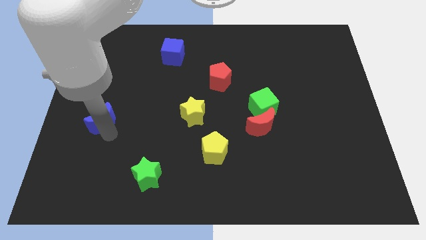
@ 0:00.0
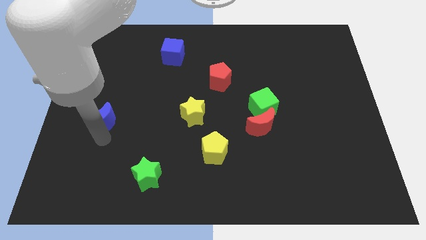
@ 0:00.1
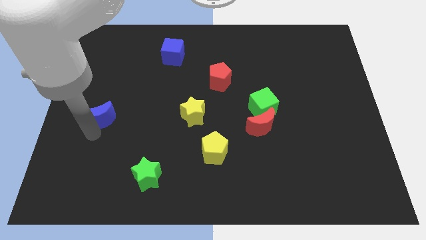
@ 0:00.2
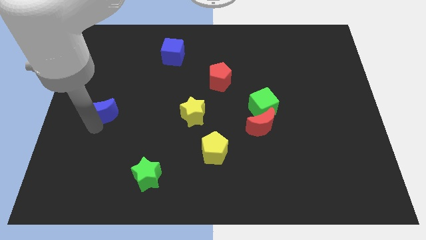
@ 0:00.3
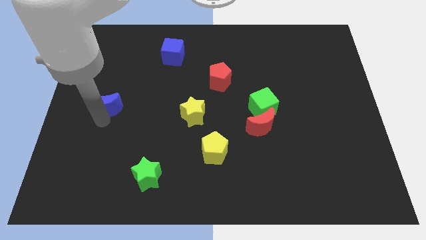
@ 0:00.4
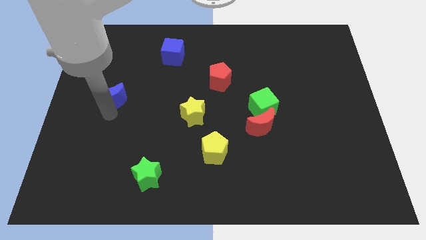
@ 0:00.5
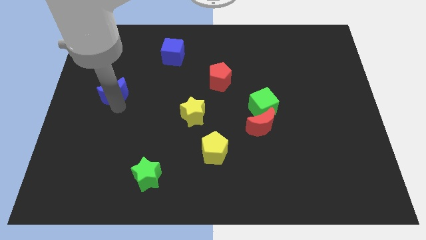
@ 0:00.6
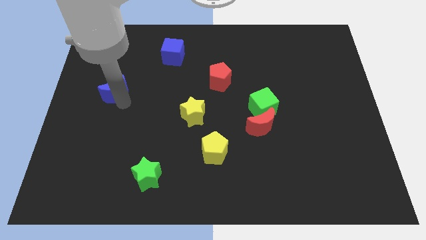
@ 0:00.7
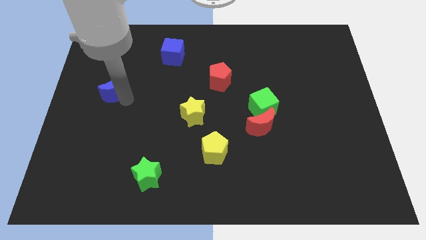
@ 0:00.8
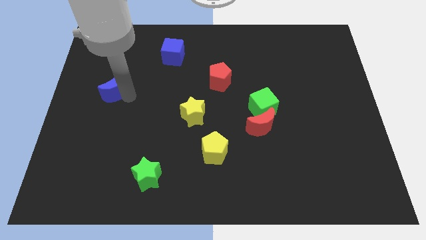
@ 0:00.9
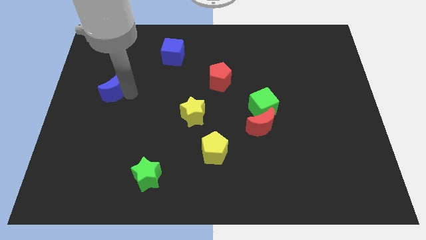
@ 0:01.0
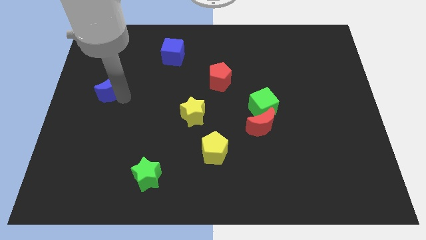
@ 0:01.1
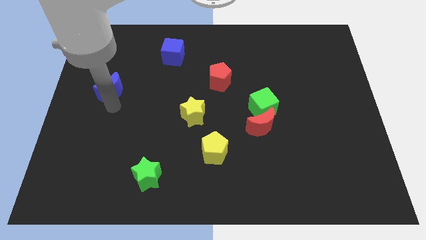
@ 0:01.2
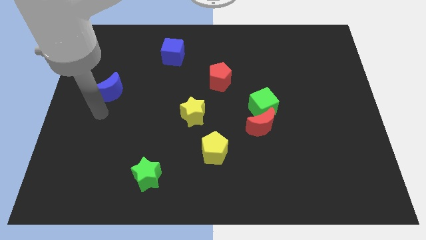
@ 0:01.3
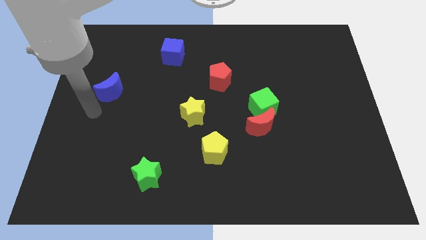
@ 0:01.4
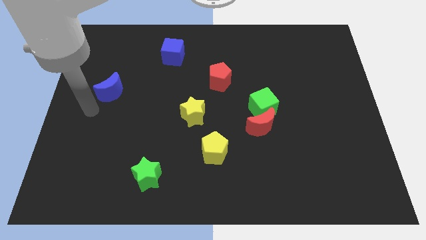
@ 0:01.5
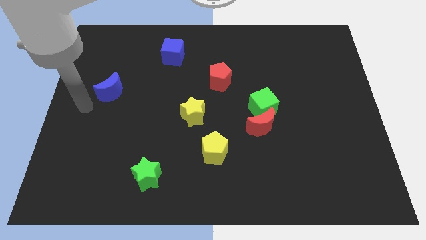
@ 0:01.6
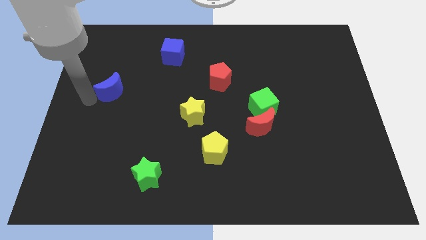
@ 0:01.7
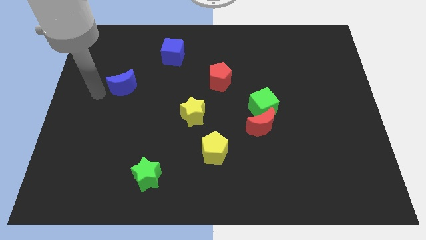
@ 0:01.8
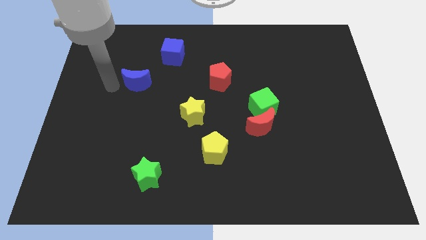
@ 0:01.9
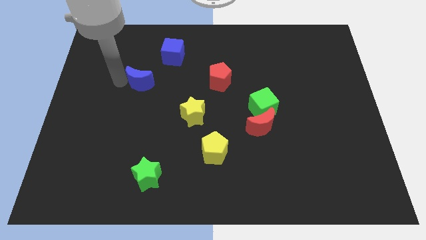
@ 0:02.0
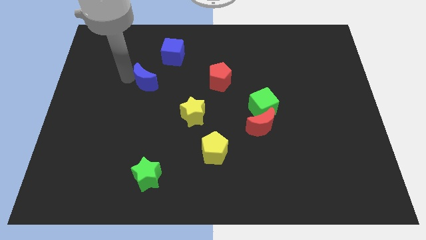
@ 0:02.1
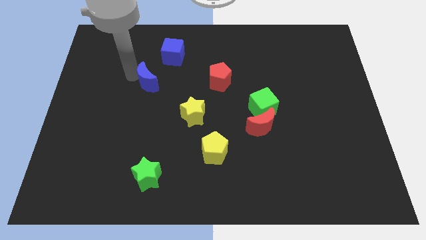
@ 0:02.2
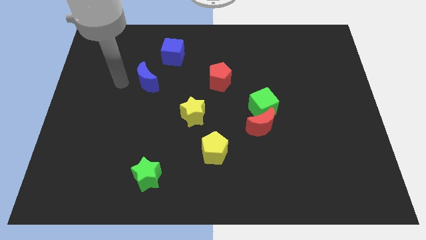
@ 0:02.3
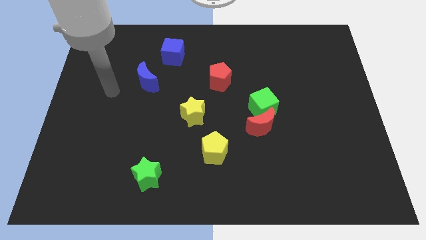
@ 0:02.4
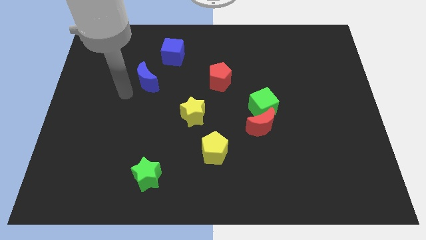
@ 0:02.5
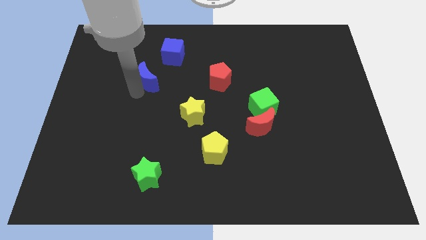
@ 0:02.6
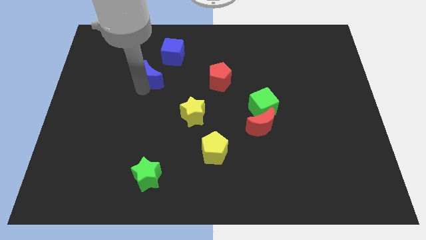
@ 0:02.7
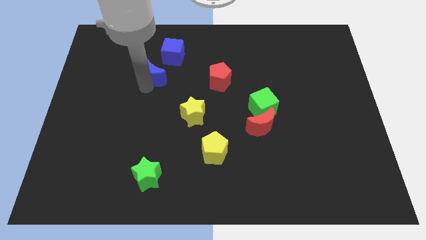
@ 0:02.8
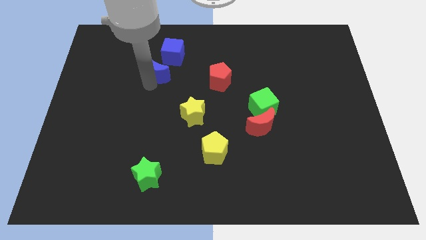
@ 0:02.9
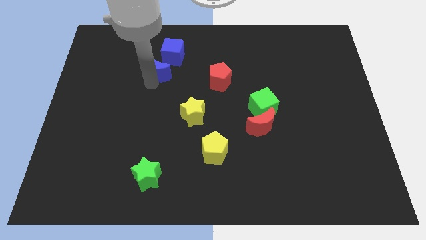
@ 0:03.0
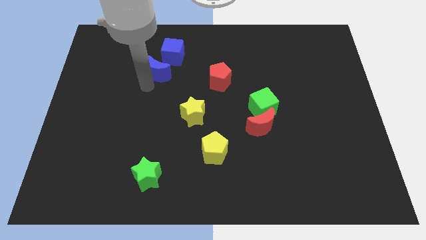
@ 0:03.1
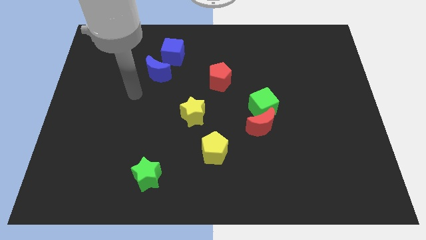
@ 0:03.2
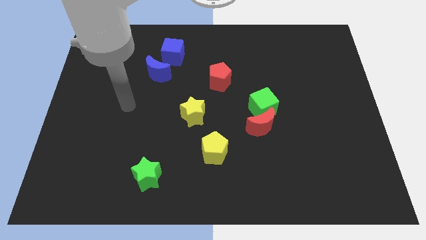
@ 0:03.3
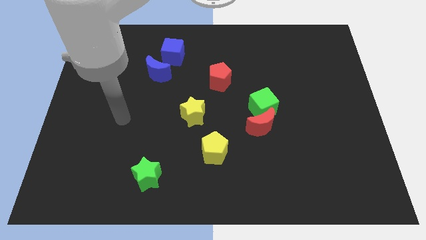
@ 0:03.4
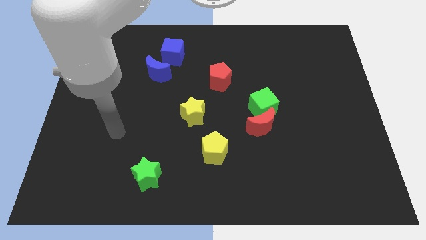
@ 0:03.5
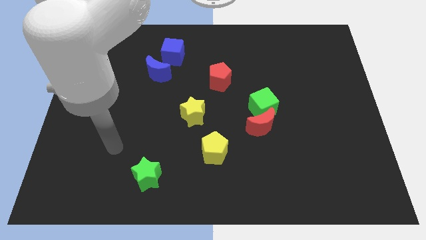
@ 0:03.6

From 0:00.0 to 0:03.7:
place the blue cube vertically above the green star

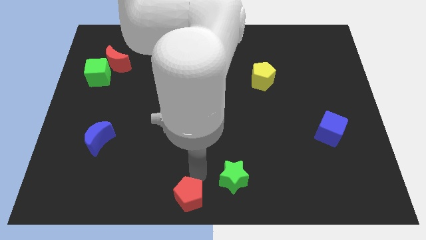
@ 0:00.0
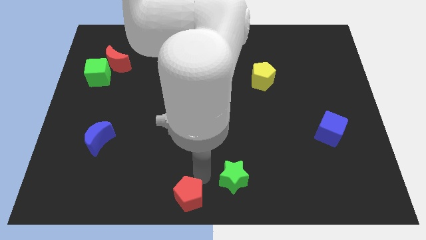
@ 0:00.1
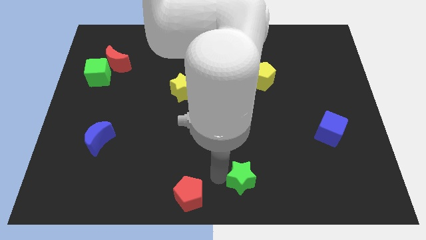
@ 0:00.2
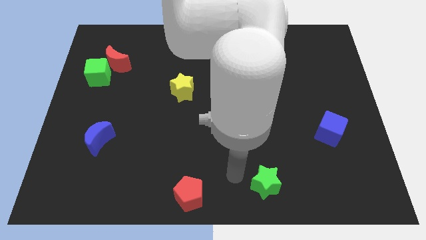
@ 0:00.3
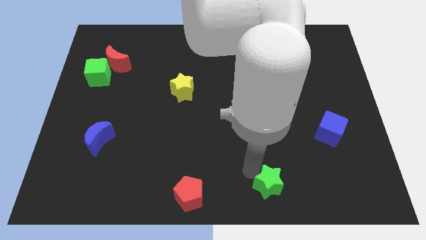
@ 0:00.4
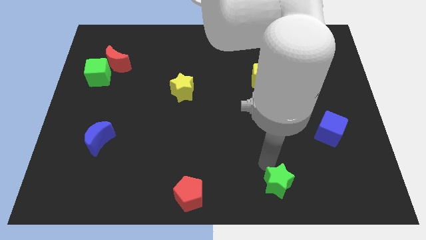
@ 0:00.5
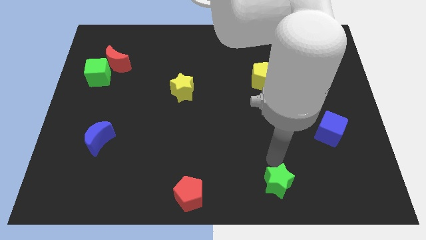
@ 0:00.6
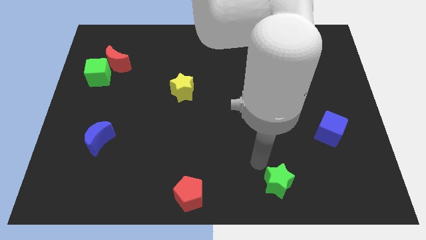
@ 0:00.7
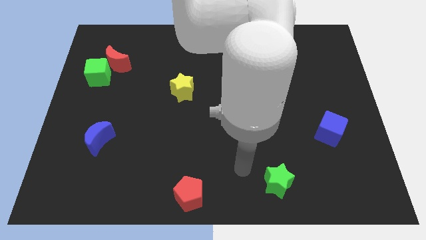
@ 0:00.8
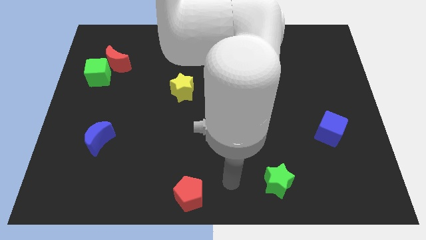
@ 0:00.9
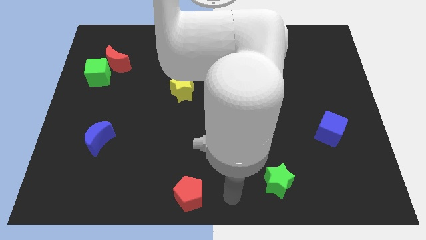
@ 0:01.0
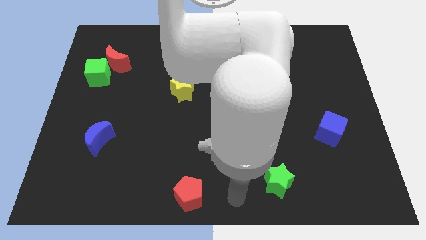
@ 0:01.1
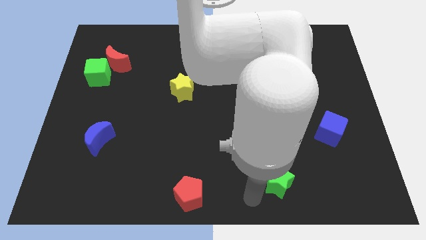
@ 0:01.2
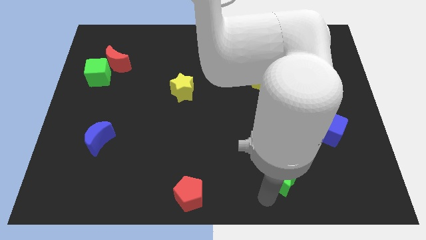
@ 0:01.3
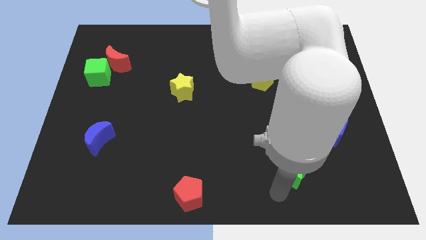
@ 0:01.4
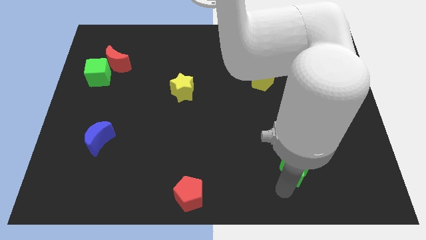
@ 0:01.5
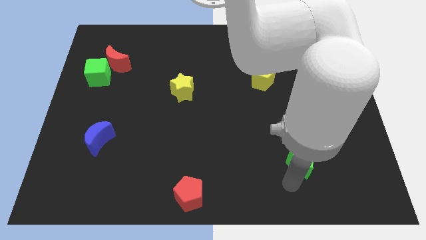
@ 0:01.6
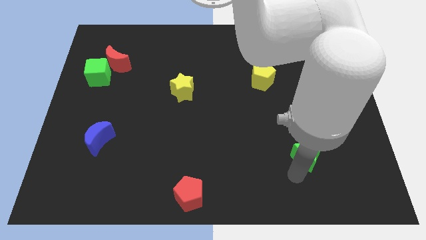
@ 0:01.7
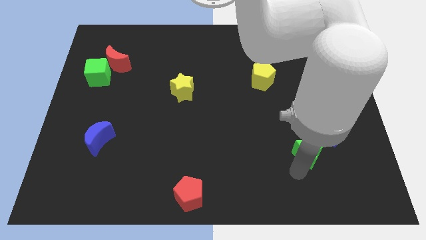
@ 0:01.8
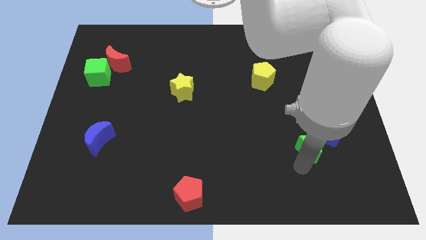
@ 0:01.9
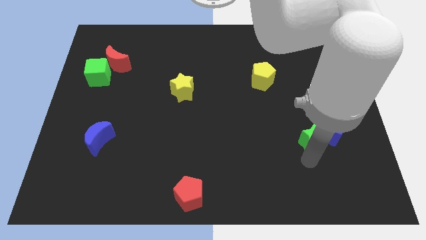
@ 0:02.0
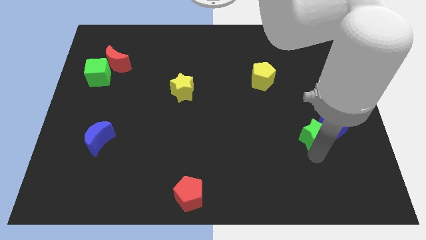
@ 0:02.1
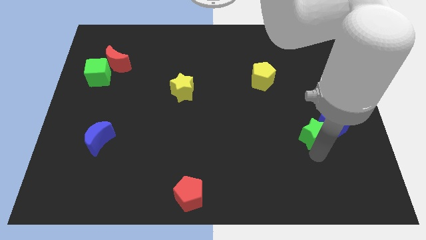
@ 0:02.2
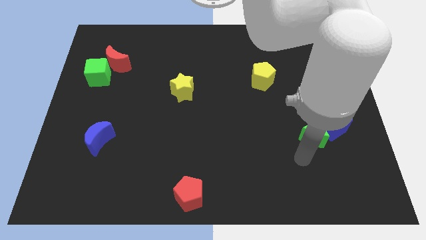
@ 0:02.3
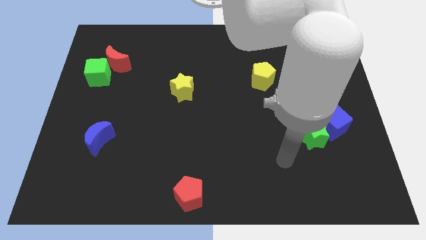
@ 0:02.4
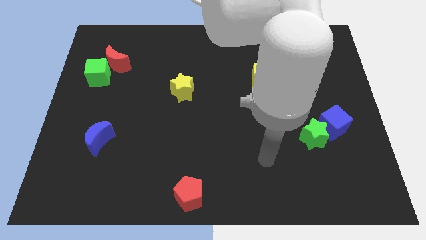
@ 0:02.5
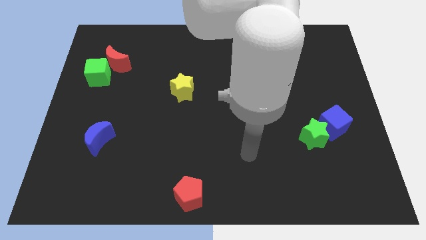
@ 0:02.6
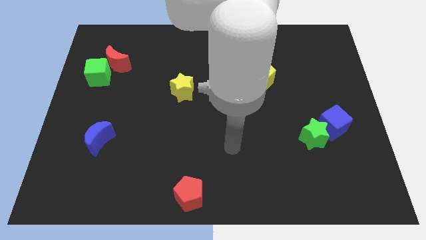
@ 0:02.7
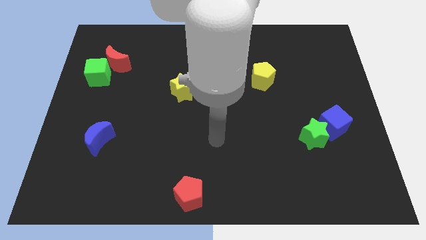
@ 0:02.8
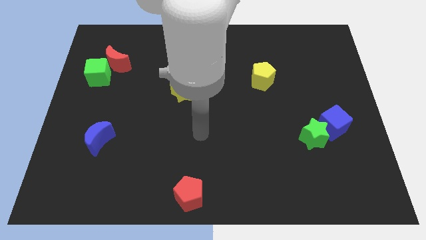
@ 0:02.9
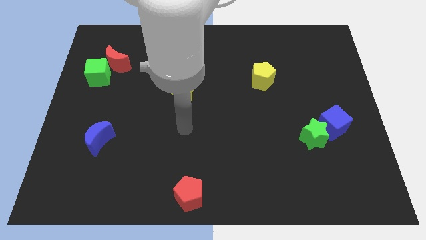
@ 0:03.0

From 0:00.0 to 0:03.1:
move the green star into the left side of the blue cube

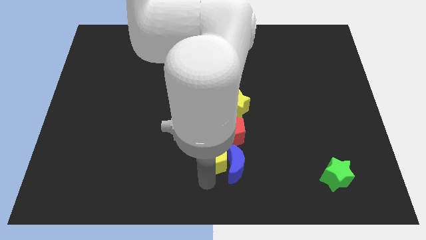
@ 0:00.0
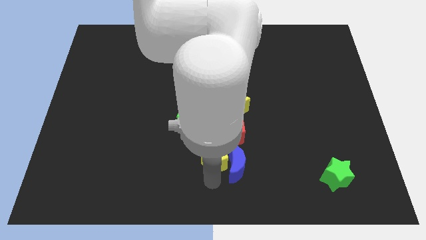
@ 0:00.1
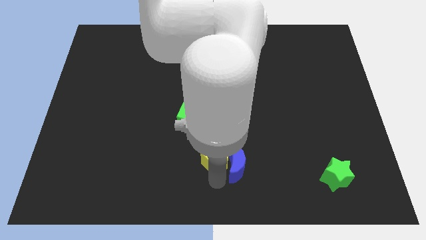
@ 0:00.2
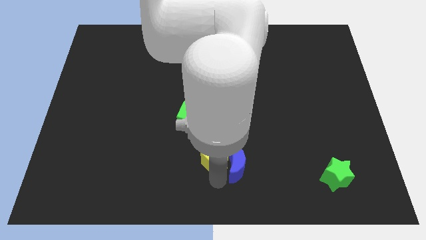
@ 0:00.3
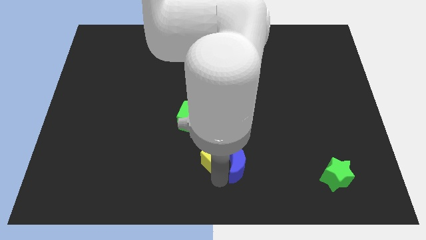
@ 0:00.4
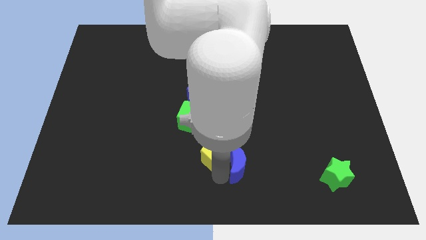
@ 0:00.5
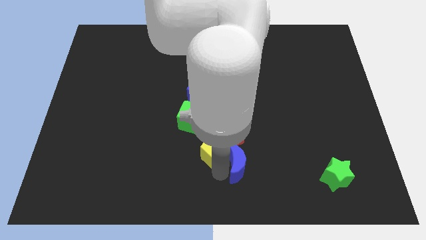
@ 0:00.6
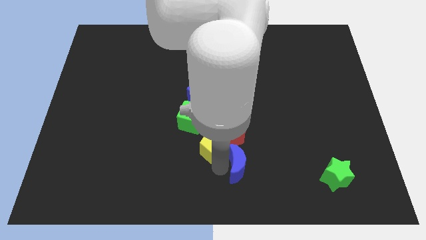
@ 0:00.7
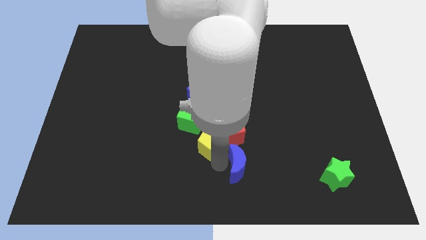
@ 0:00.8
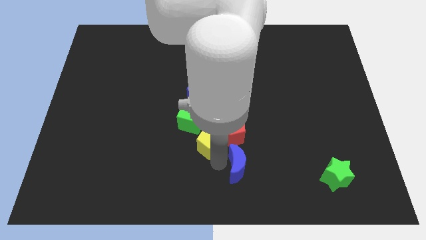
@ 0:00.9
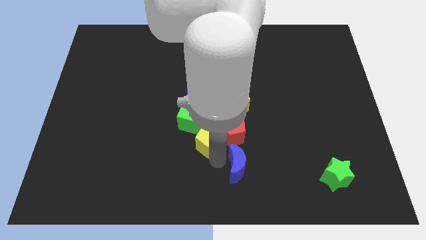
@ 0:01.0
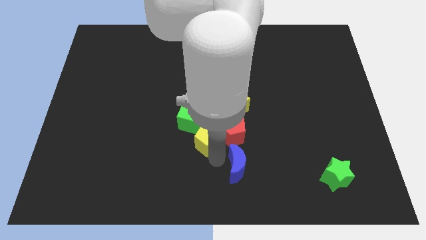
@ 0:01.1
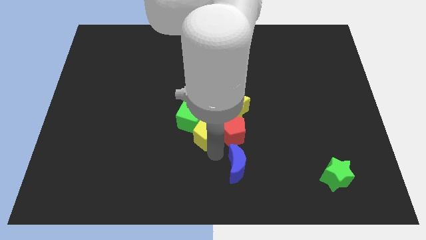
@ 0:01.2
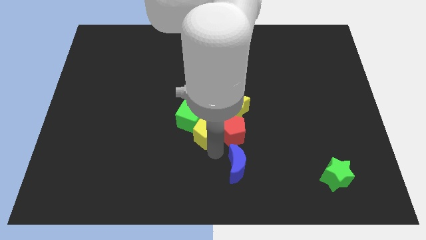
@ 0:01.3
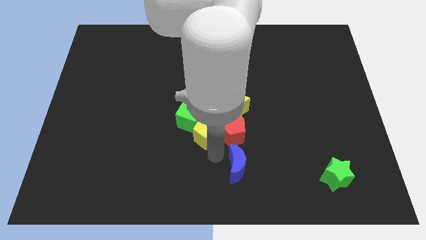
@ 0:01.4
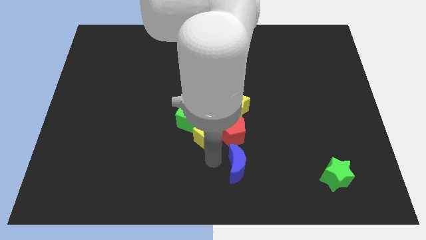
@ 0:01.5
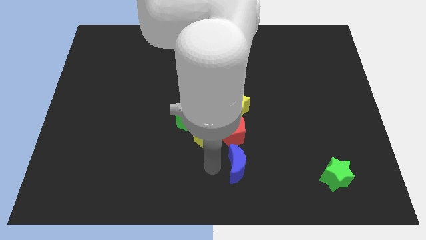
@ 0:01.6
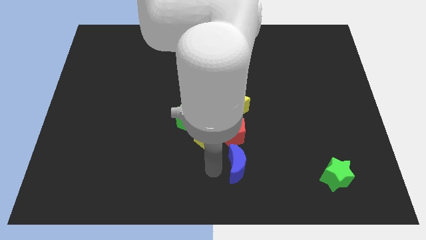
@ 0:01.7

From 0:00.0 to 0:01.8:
move the yellow pentagon into the green cube

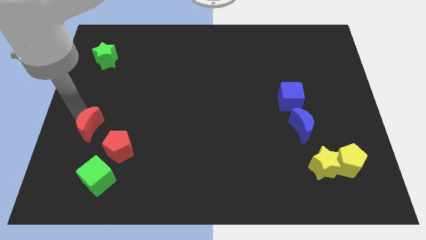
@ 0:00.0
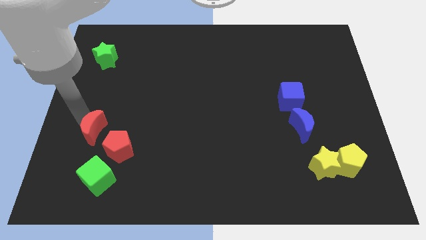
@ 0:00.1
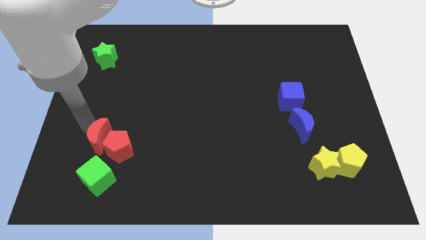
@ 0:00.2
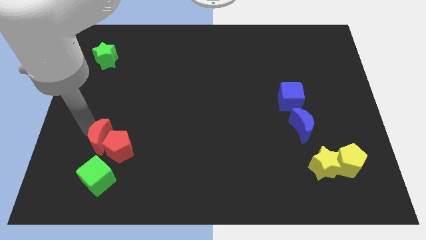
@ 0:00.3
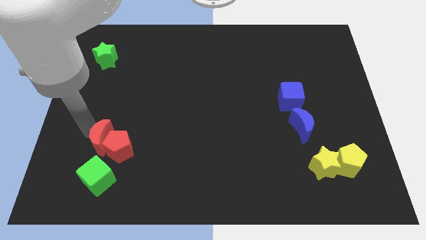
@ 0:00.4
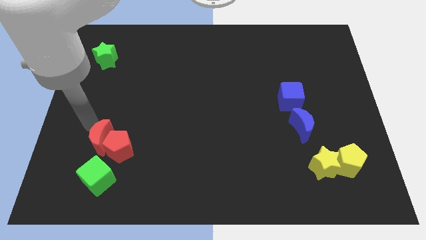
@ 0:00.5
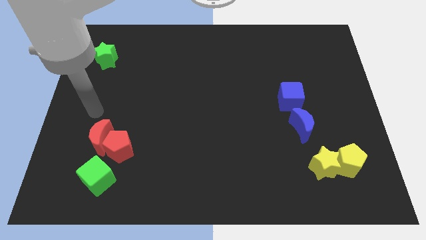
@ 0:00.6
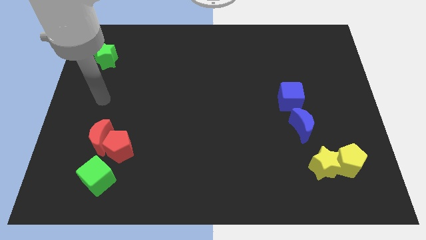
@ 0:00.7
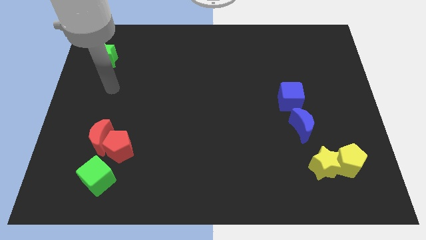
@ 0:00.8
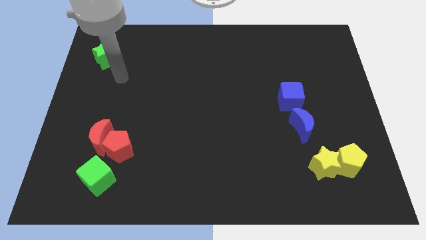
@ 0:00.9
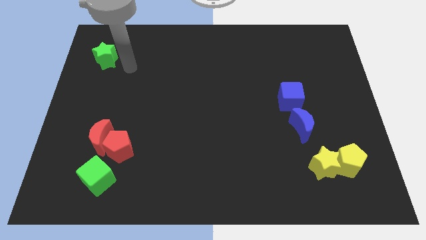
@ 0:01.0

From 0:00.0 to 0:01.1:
push the red moon into the red pentagon
